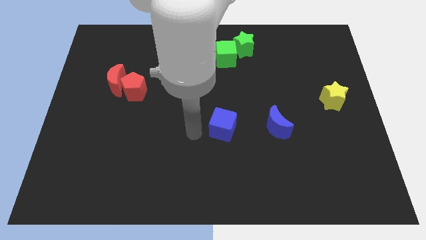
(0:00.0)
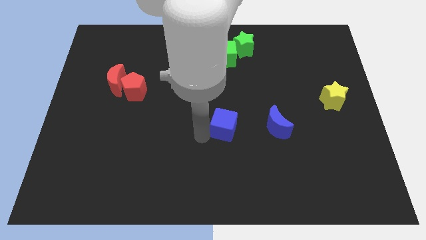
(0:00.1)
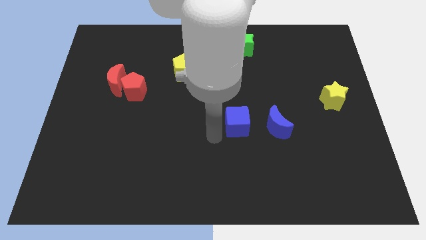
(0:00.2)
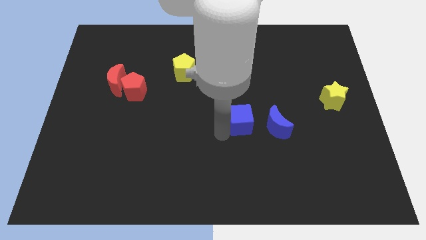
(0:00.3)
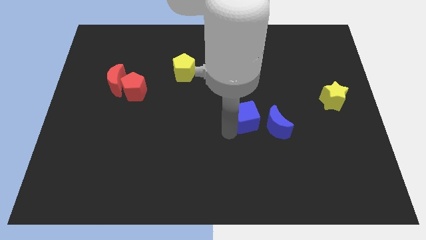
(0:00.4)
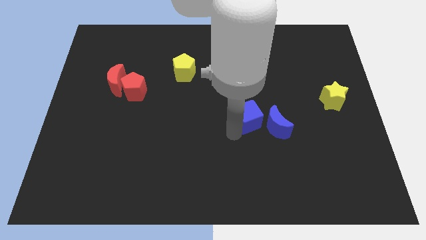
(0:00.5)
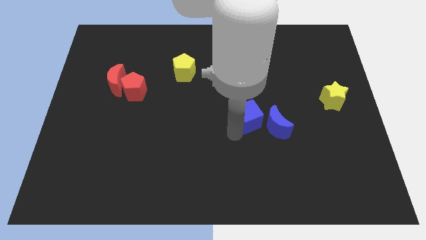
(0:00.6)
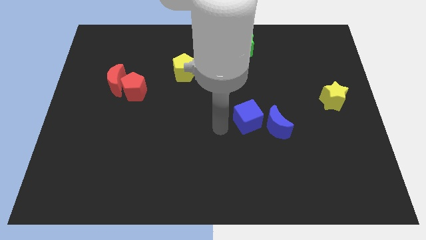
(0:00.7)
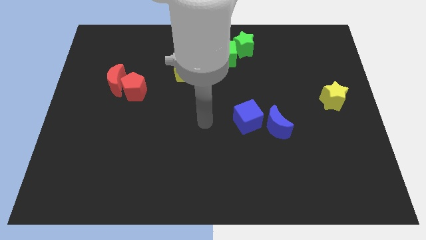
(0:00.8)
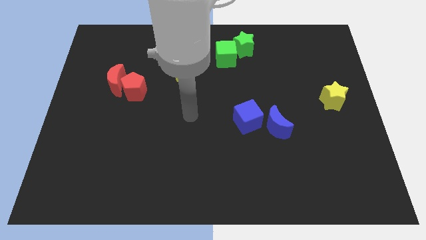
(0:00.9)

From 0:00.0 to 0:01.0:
place blue cube beside blue crescent

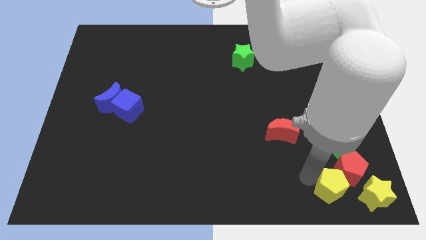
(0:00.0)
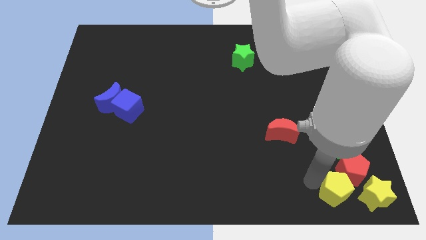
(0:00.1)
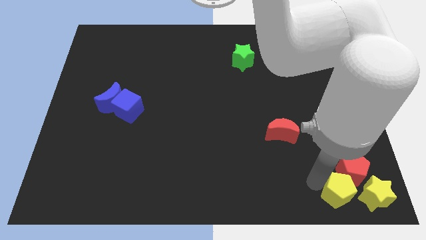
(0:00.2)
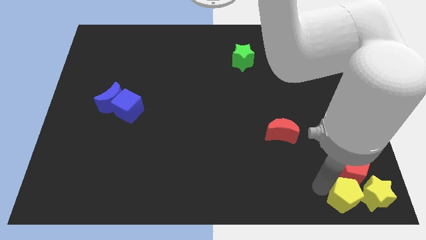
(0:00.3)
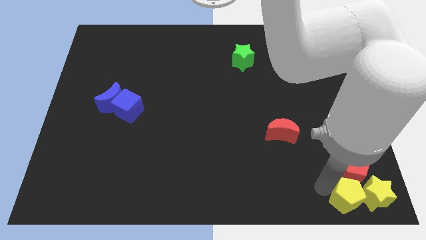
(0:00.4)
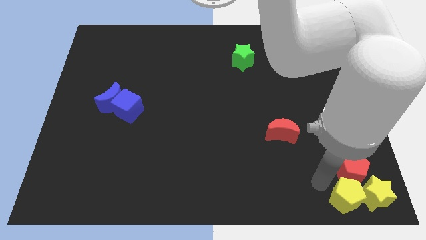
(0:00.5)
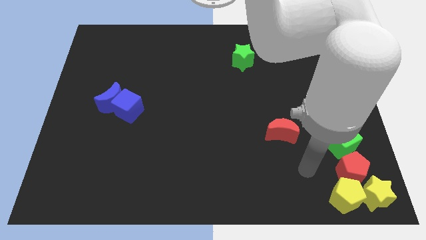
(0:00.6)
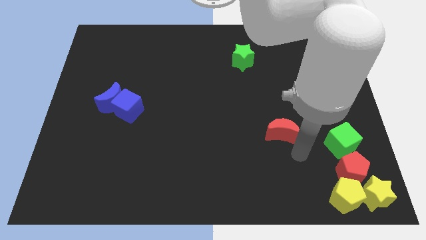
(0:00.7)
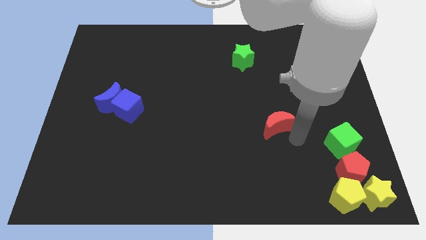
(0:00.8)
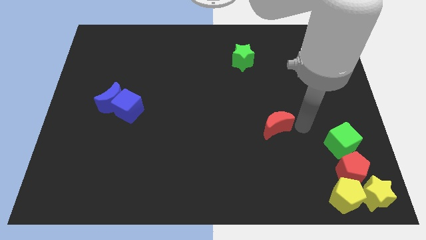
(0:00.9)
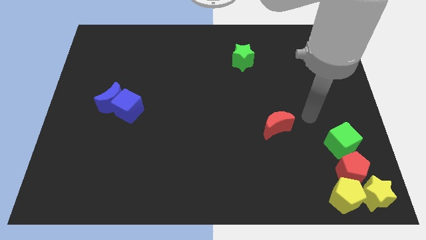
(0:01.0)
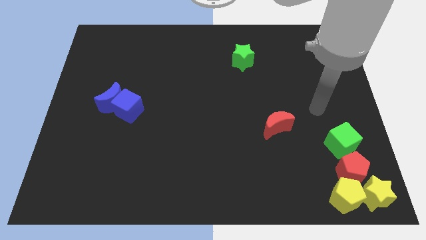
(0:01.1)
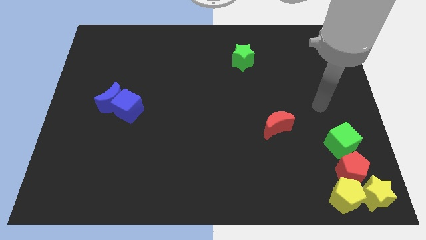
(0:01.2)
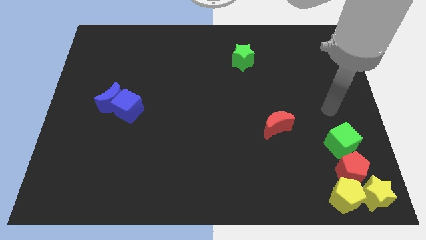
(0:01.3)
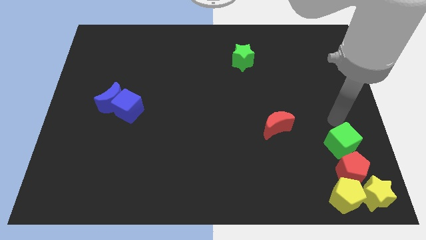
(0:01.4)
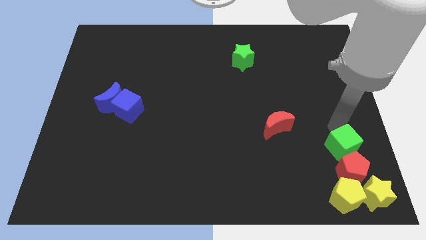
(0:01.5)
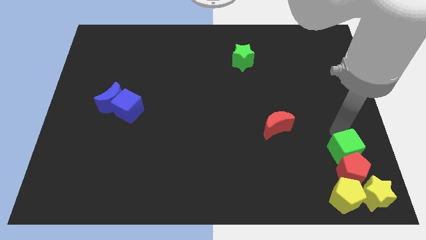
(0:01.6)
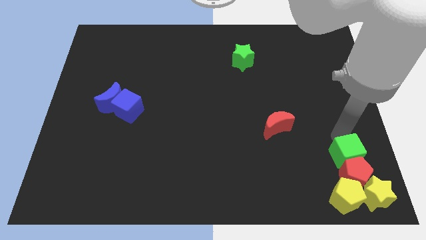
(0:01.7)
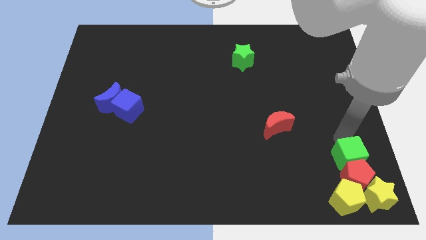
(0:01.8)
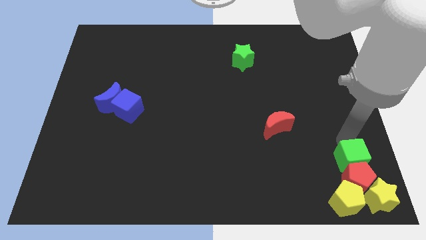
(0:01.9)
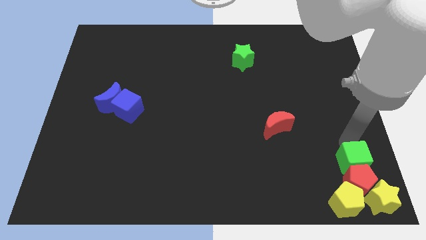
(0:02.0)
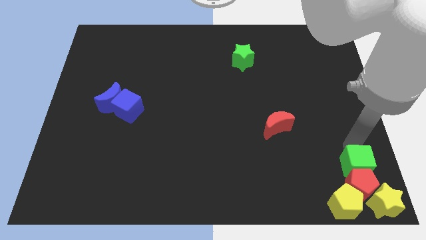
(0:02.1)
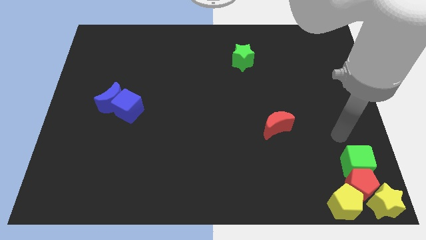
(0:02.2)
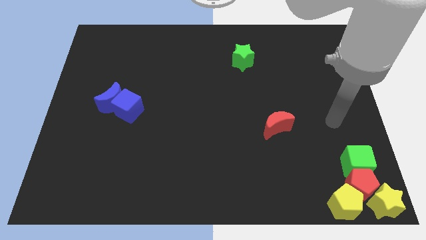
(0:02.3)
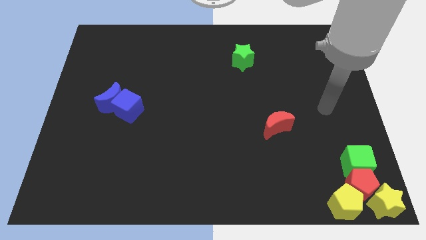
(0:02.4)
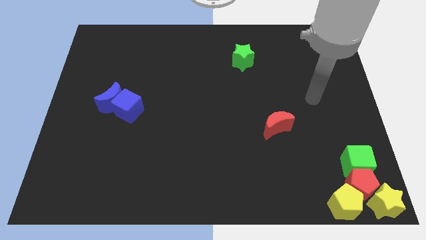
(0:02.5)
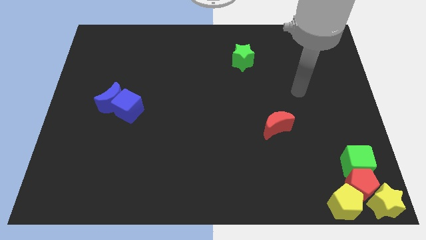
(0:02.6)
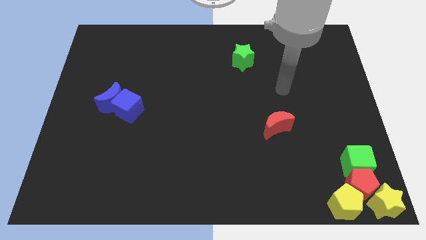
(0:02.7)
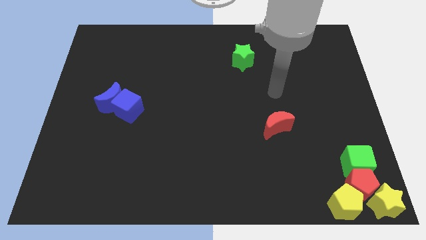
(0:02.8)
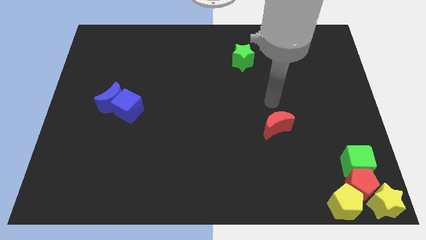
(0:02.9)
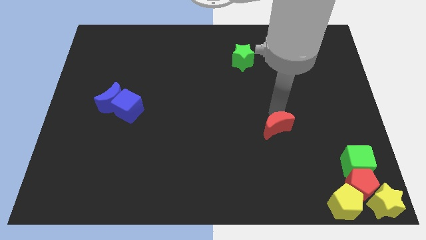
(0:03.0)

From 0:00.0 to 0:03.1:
move the green cube into the group of both the yellow blocks and the red pentagon

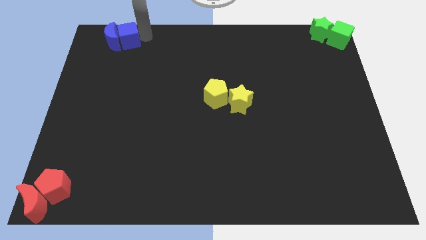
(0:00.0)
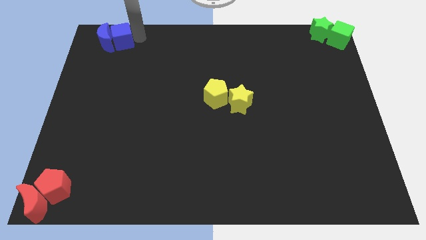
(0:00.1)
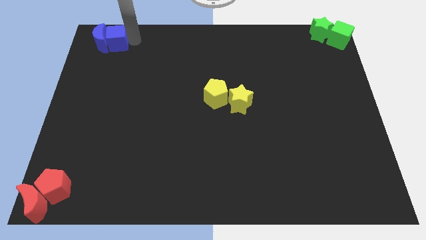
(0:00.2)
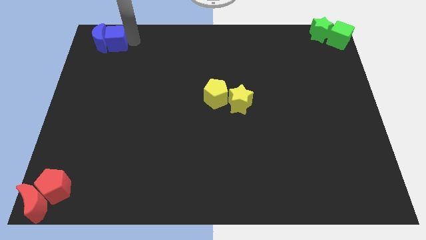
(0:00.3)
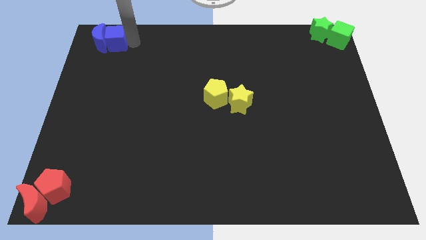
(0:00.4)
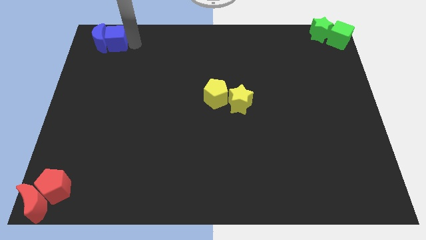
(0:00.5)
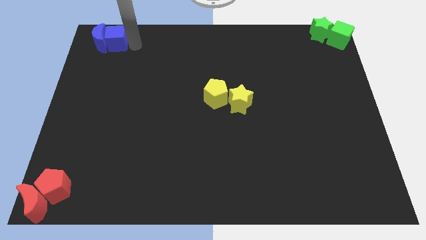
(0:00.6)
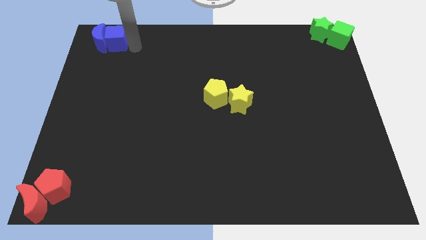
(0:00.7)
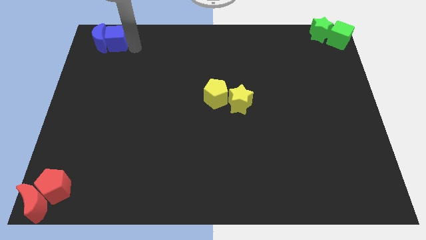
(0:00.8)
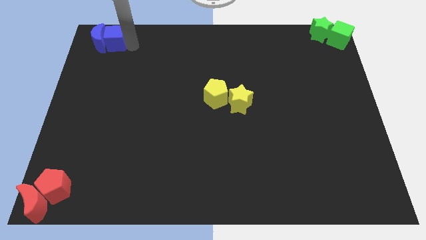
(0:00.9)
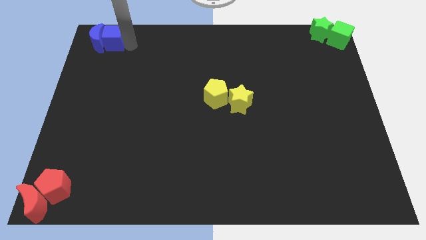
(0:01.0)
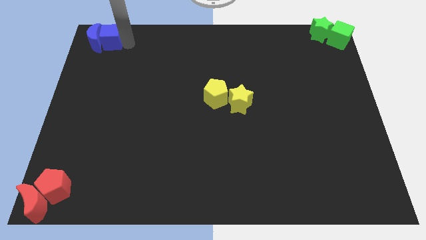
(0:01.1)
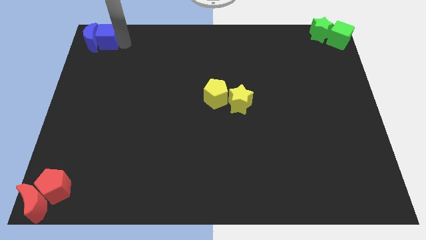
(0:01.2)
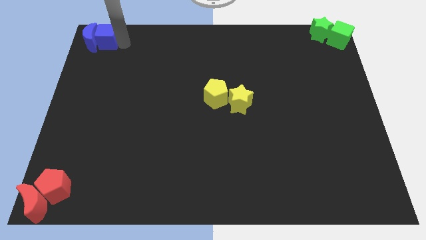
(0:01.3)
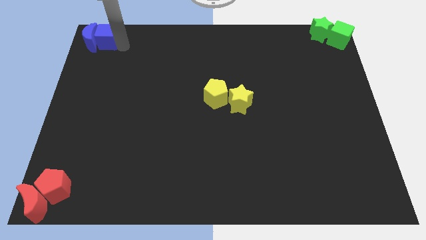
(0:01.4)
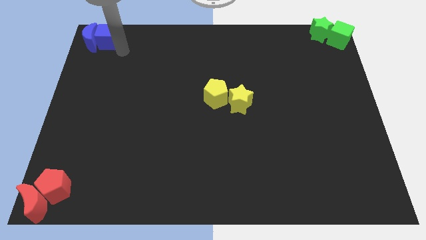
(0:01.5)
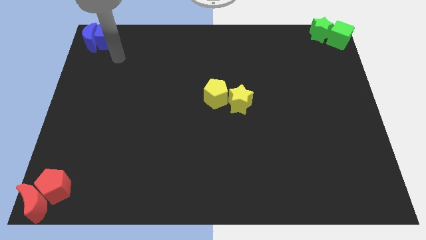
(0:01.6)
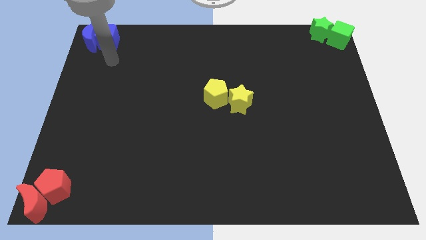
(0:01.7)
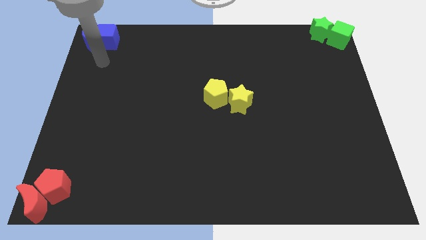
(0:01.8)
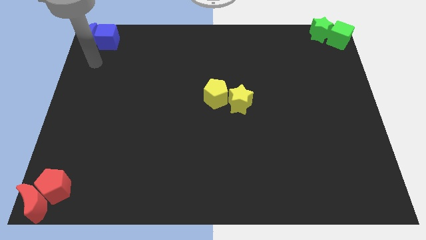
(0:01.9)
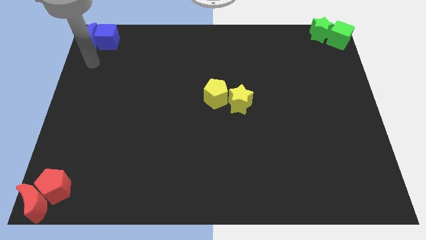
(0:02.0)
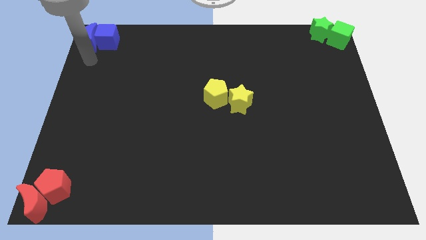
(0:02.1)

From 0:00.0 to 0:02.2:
move the blue blocks to the top left corner of the board

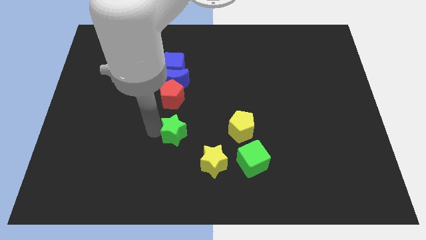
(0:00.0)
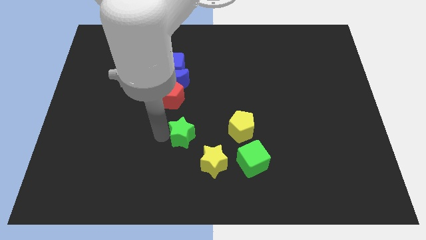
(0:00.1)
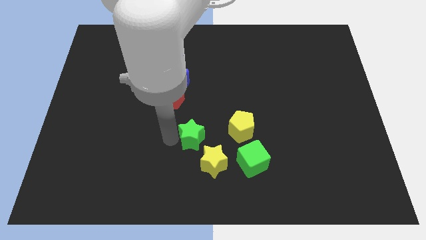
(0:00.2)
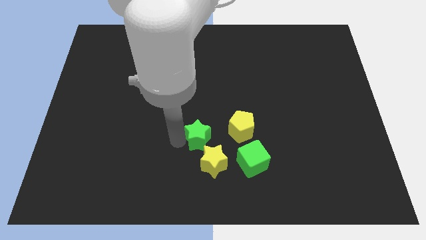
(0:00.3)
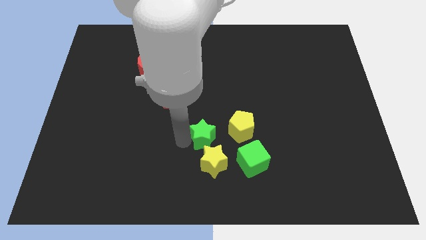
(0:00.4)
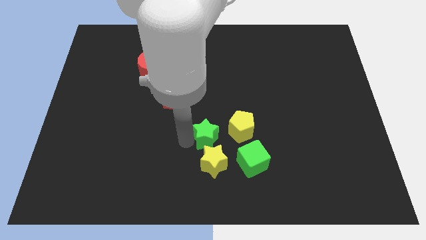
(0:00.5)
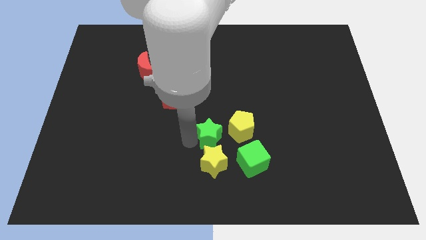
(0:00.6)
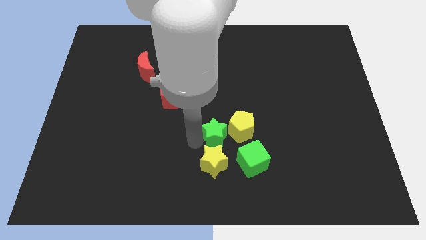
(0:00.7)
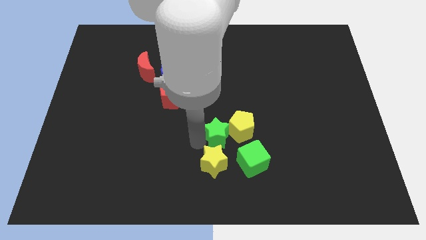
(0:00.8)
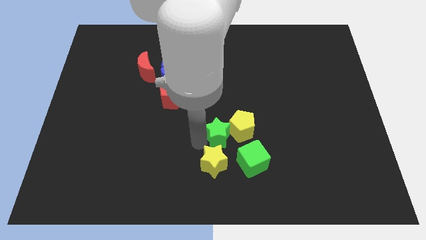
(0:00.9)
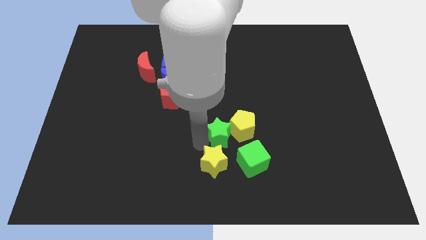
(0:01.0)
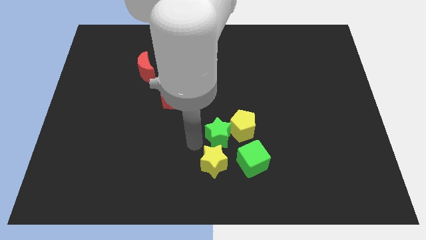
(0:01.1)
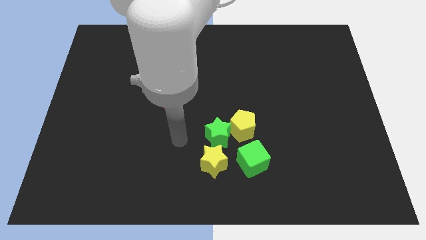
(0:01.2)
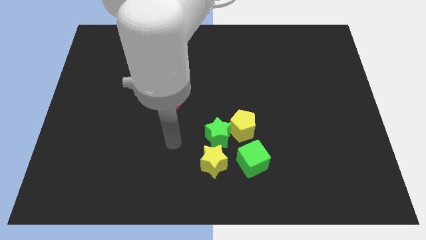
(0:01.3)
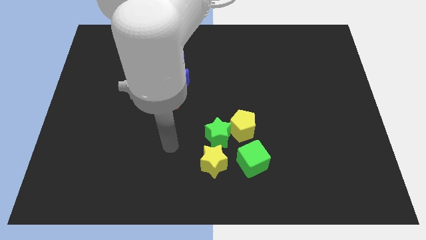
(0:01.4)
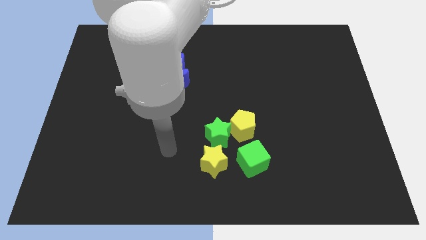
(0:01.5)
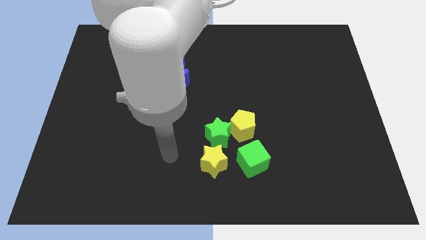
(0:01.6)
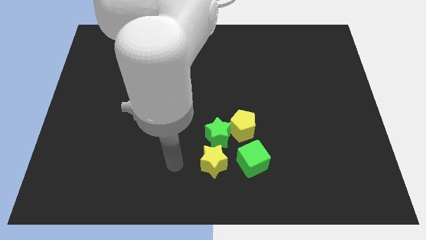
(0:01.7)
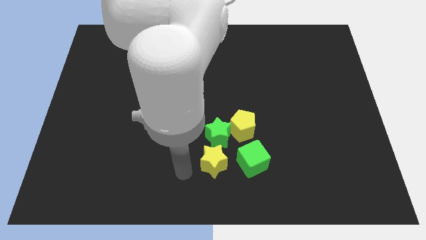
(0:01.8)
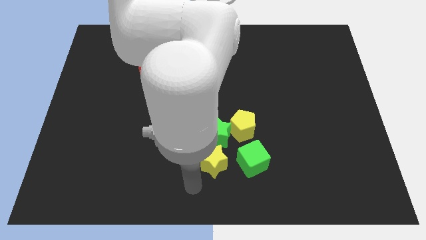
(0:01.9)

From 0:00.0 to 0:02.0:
push the green star towards the yellow pentagon

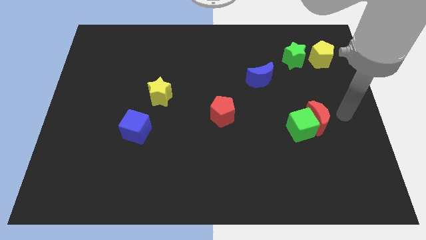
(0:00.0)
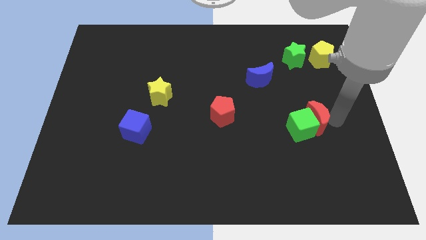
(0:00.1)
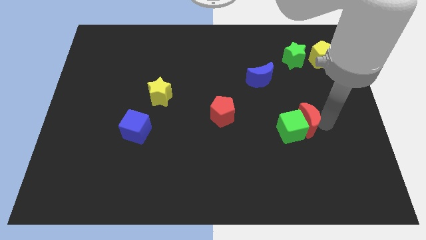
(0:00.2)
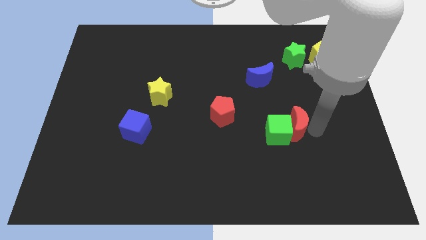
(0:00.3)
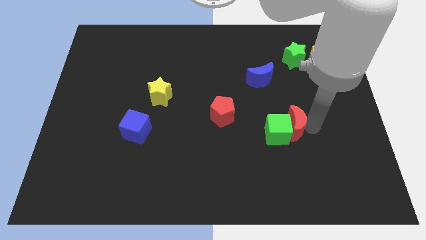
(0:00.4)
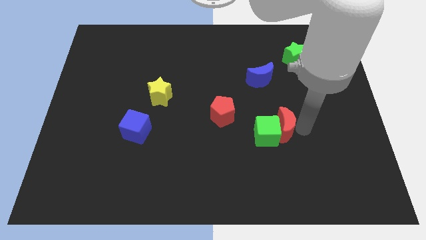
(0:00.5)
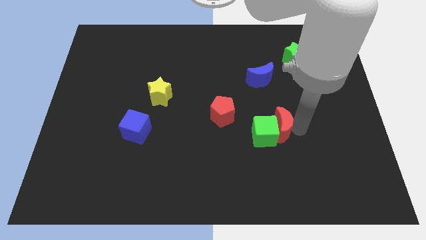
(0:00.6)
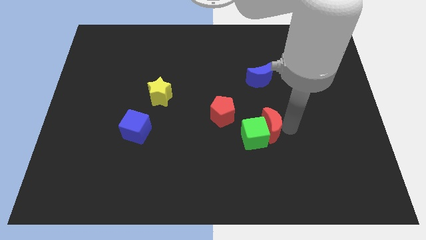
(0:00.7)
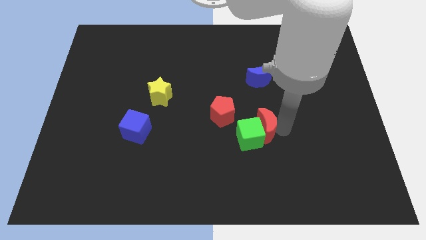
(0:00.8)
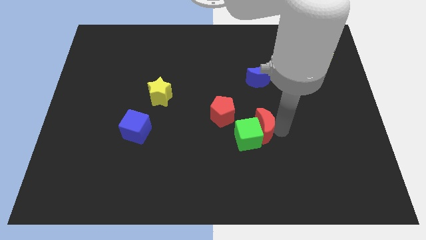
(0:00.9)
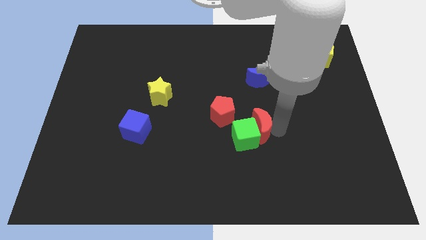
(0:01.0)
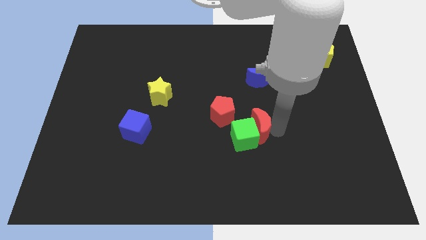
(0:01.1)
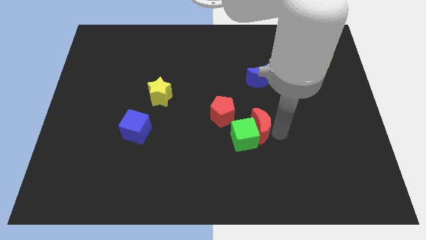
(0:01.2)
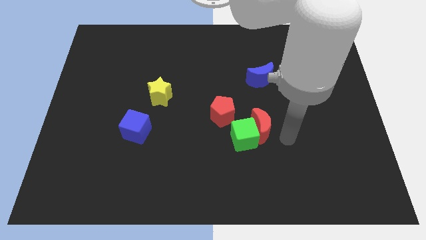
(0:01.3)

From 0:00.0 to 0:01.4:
slightly move the red crescent into the green cube towards left
